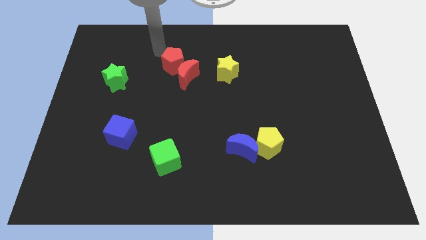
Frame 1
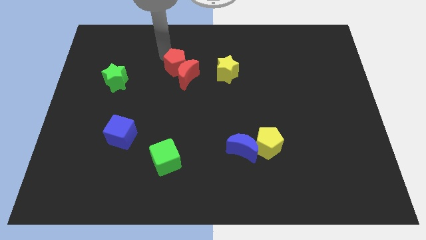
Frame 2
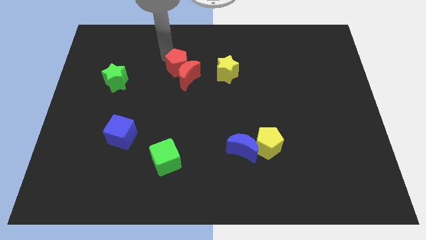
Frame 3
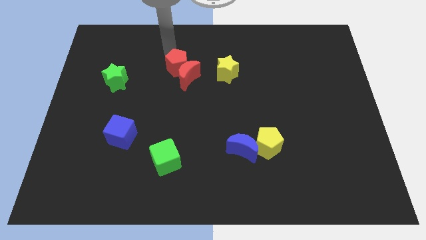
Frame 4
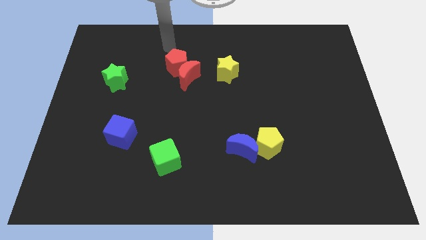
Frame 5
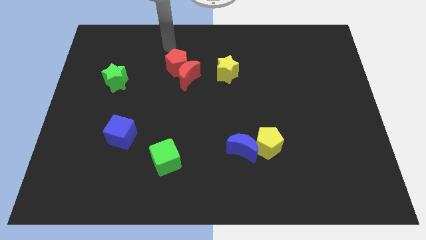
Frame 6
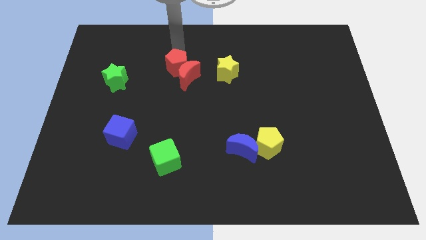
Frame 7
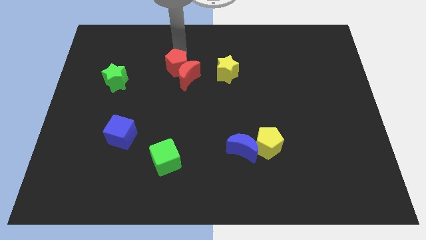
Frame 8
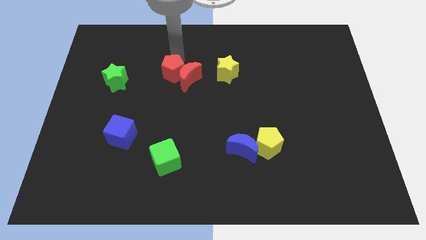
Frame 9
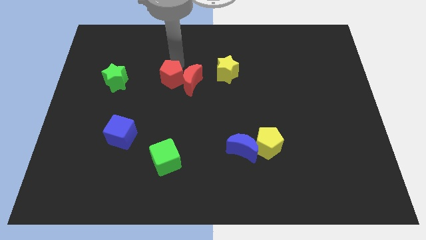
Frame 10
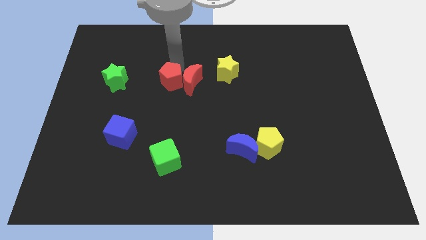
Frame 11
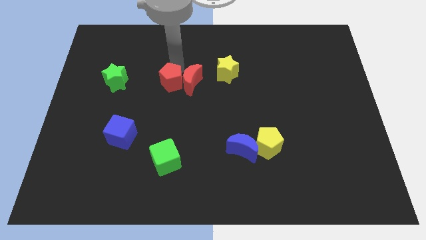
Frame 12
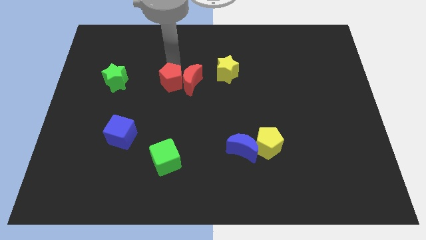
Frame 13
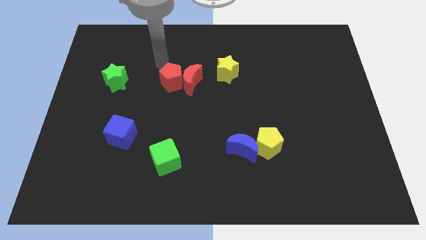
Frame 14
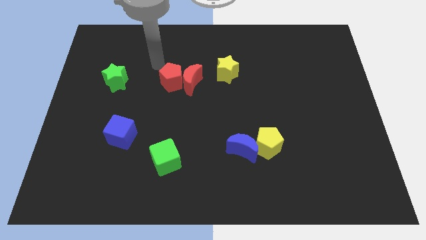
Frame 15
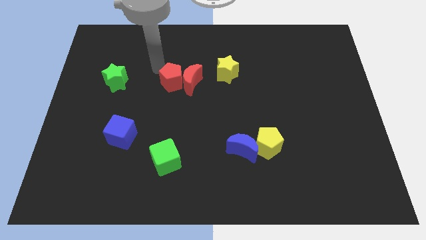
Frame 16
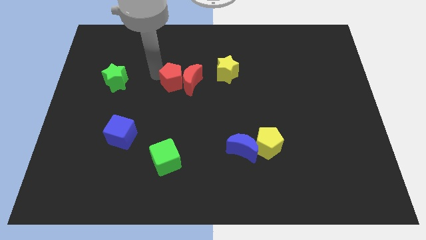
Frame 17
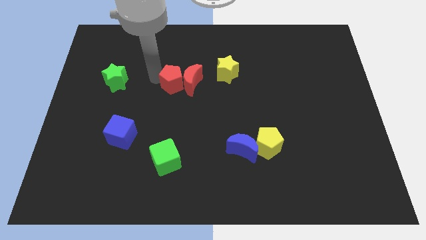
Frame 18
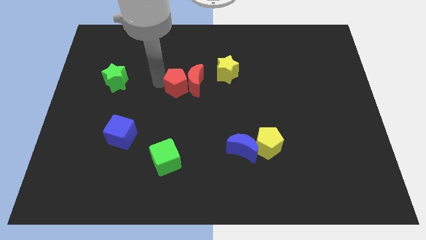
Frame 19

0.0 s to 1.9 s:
move the red pentagon to the left side of the red crescent

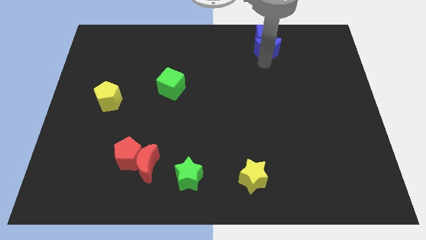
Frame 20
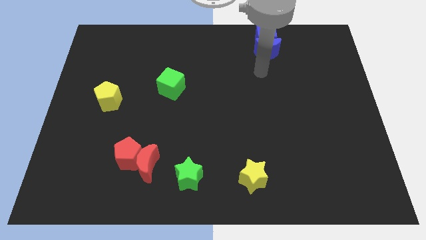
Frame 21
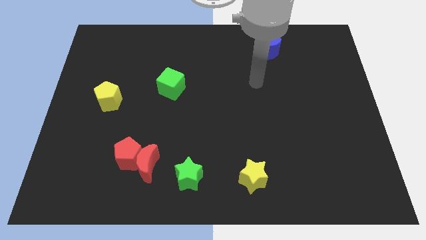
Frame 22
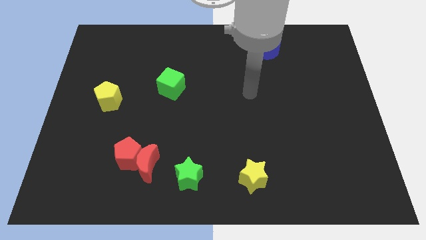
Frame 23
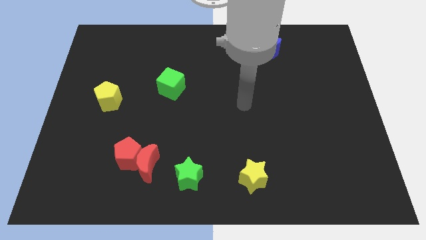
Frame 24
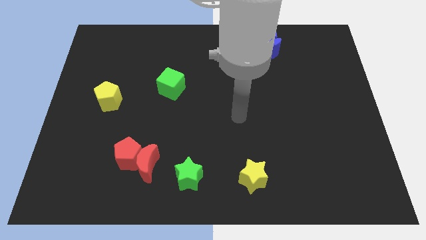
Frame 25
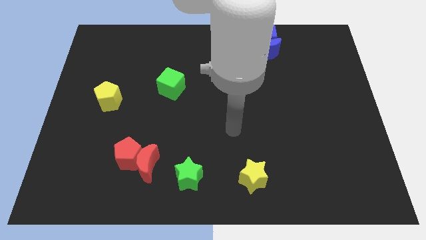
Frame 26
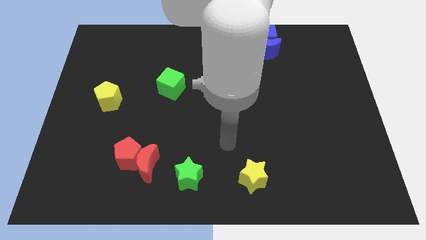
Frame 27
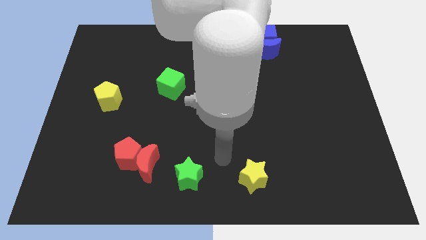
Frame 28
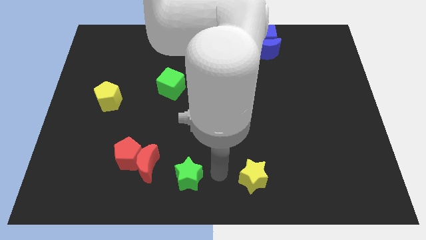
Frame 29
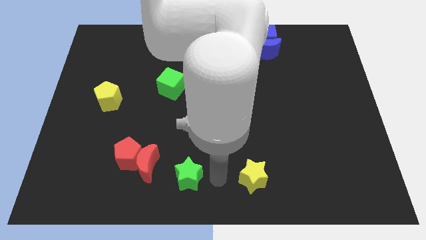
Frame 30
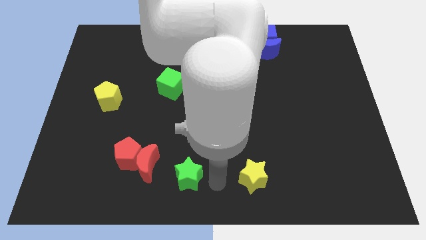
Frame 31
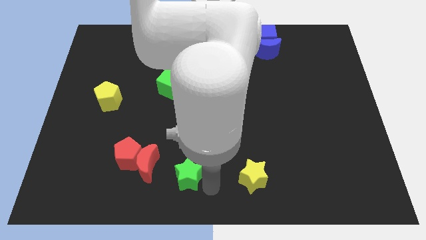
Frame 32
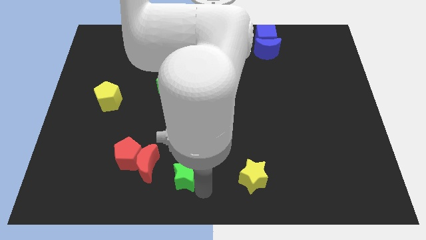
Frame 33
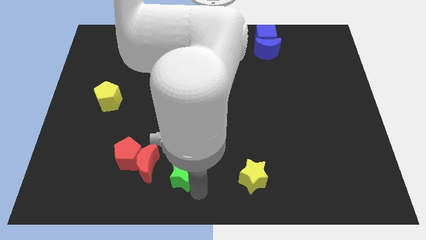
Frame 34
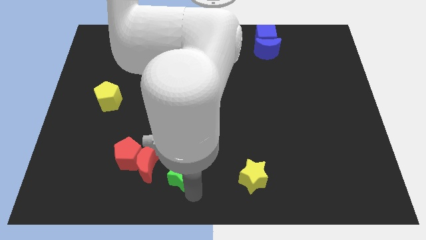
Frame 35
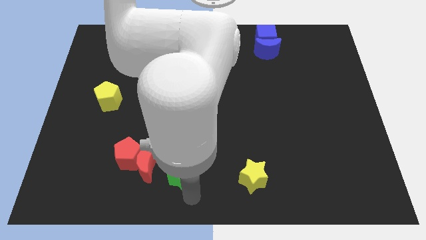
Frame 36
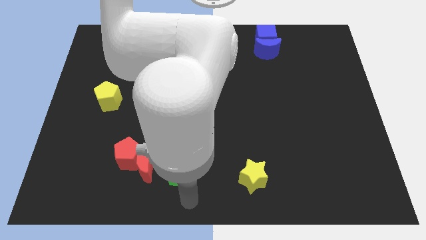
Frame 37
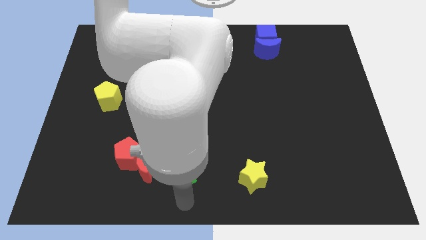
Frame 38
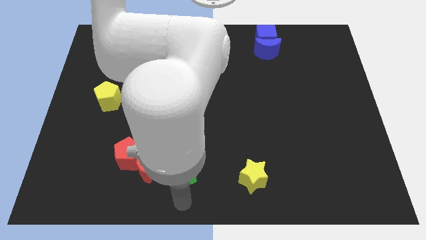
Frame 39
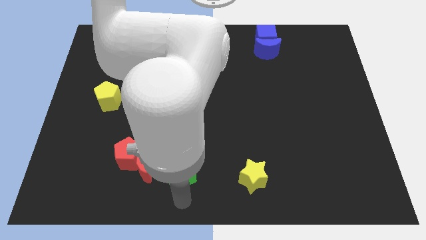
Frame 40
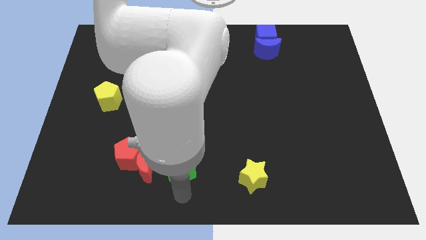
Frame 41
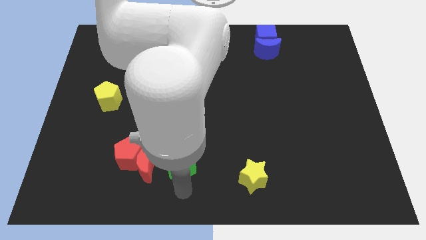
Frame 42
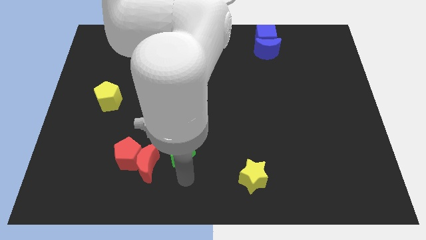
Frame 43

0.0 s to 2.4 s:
place the green star at the top right side of red crescent

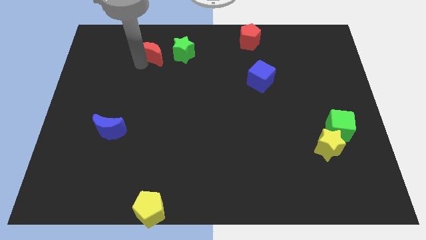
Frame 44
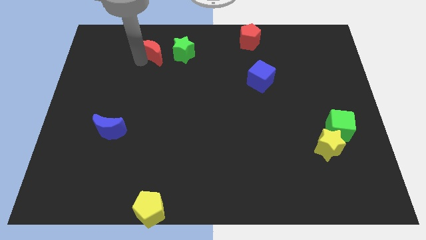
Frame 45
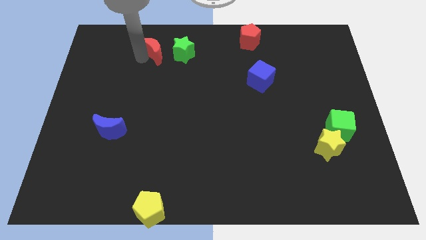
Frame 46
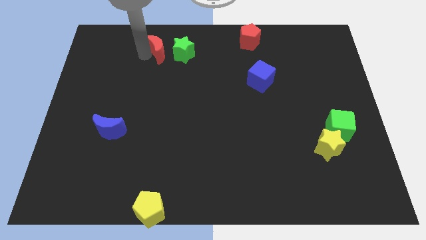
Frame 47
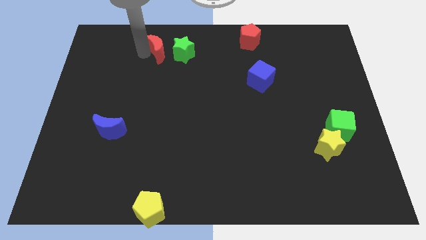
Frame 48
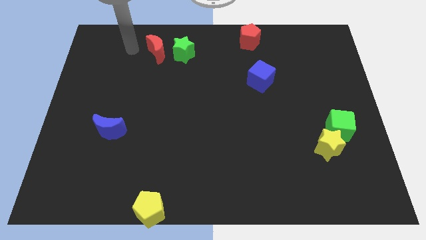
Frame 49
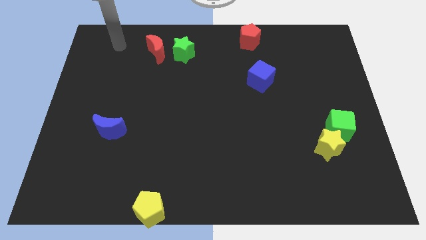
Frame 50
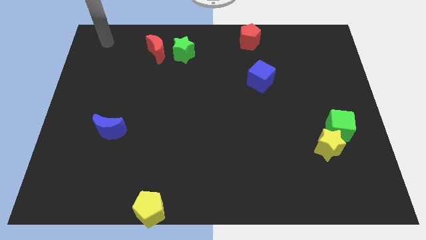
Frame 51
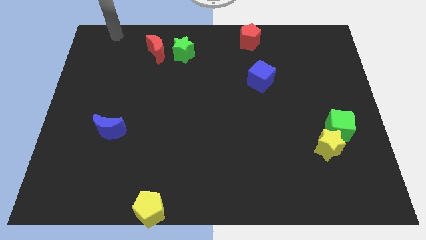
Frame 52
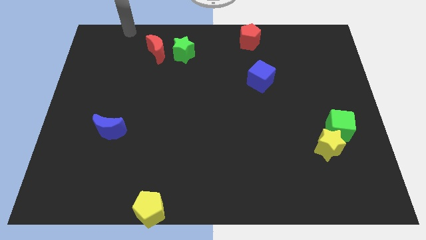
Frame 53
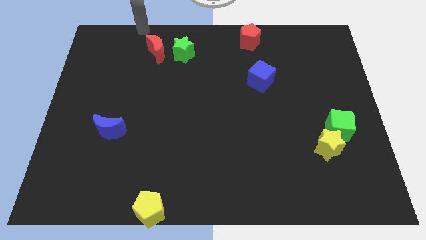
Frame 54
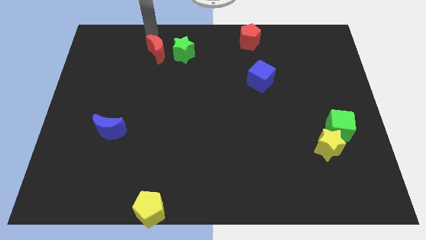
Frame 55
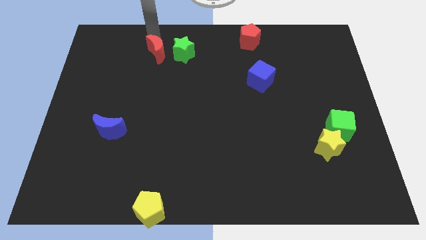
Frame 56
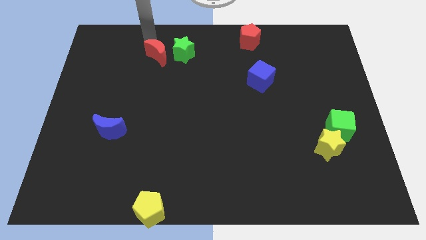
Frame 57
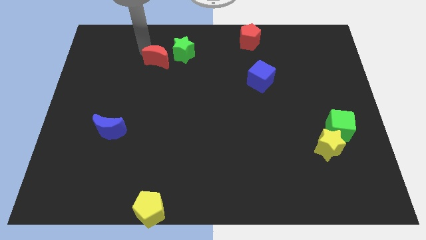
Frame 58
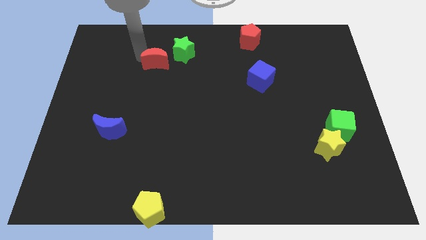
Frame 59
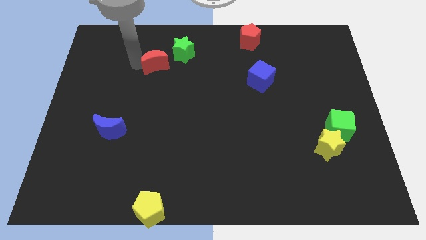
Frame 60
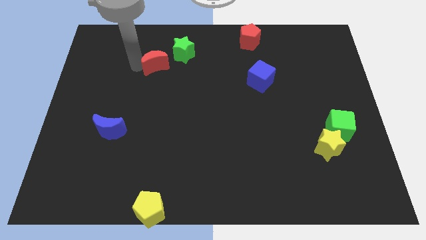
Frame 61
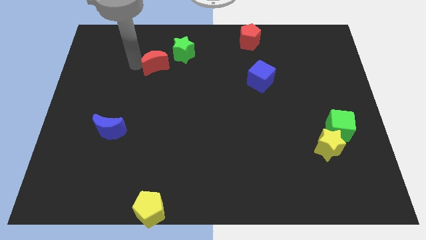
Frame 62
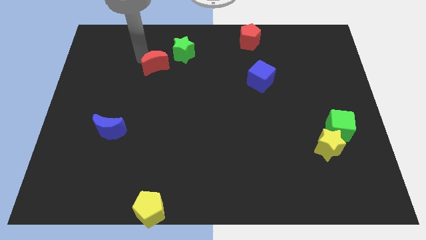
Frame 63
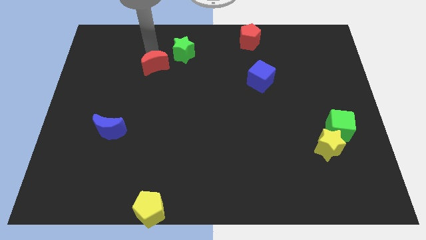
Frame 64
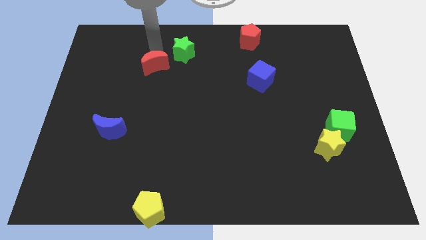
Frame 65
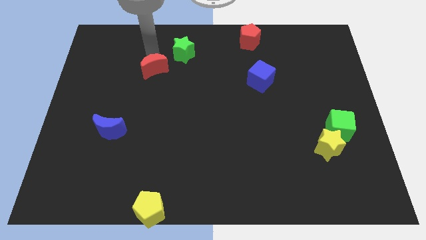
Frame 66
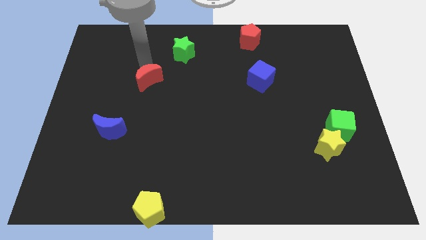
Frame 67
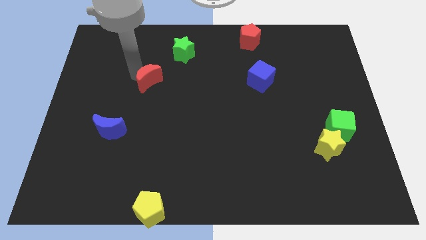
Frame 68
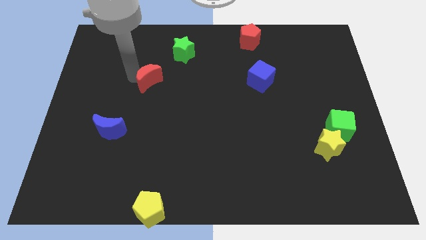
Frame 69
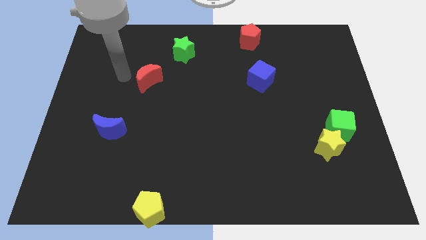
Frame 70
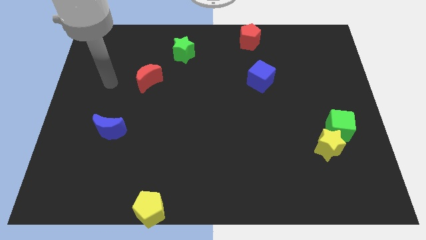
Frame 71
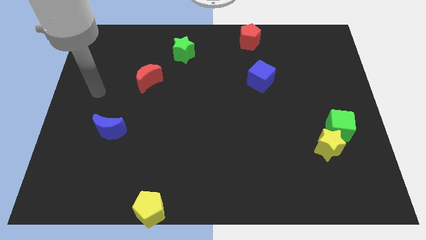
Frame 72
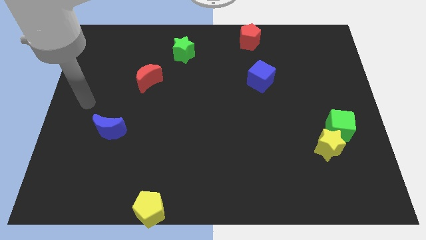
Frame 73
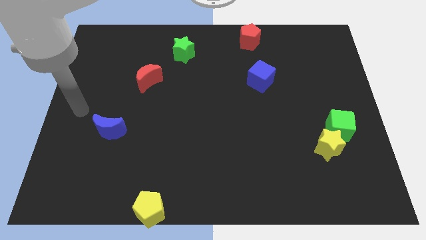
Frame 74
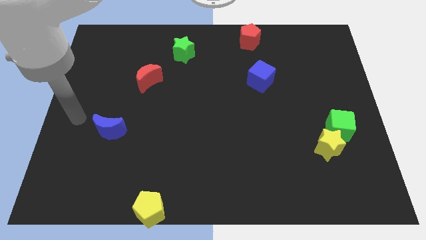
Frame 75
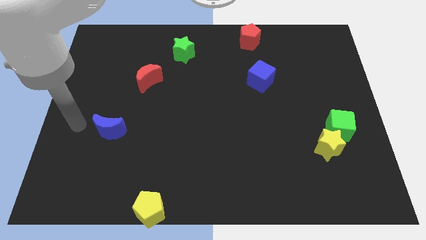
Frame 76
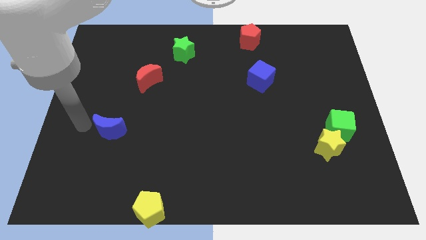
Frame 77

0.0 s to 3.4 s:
place the red moon between green star and blue moon

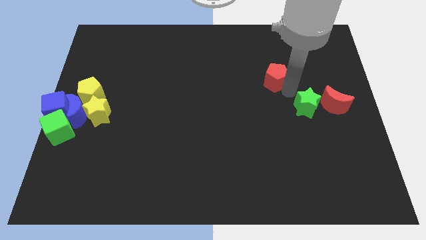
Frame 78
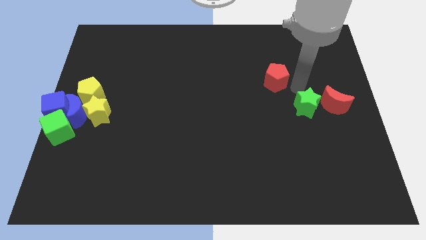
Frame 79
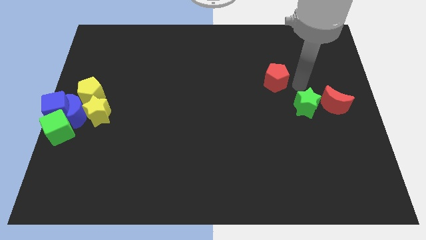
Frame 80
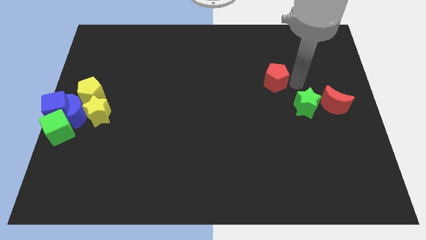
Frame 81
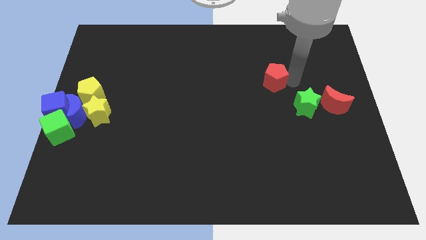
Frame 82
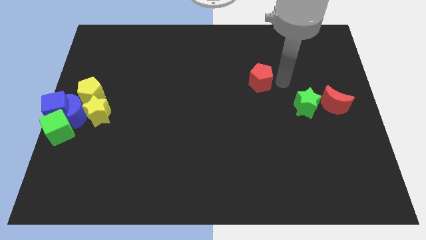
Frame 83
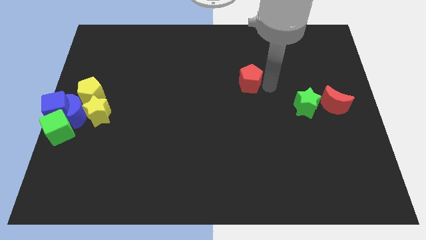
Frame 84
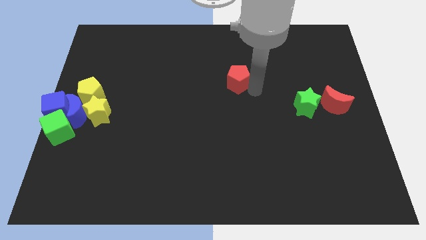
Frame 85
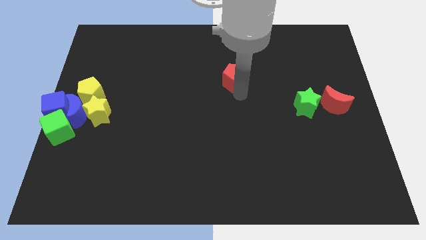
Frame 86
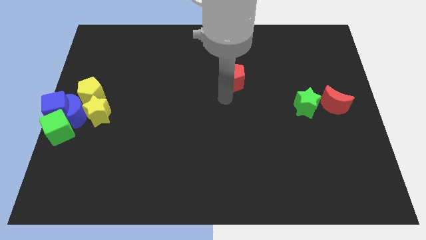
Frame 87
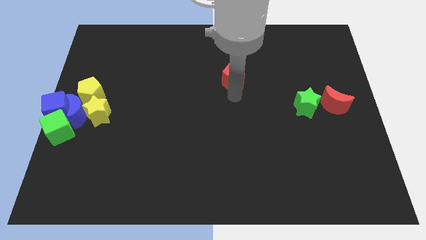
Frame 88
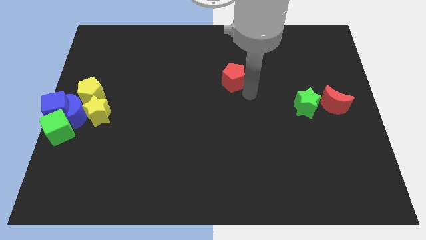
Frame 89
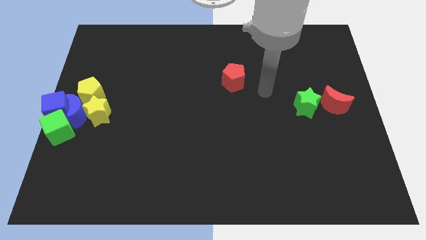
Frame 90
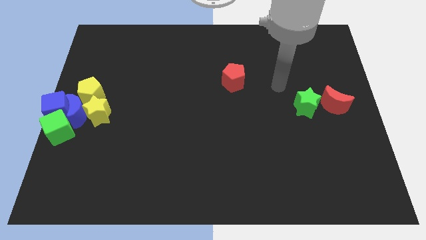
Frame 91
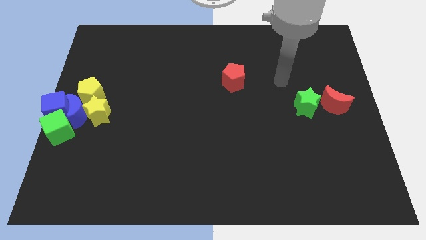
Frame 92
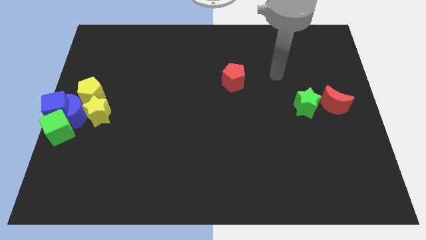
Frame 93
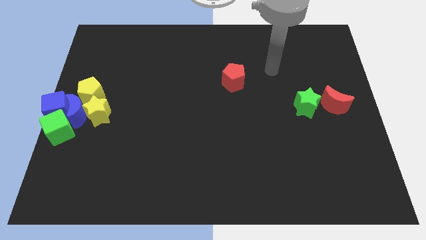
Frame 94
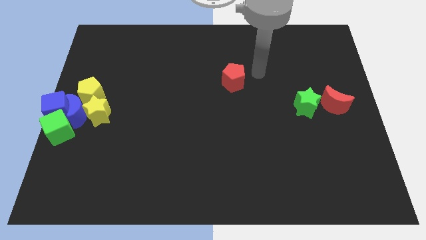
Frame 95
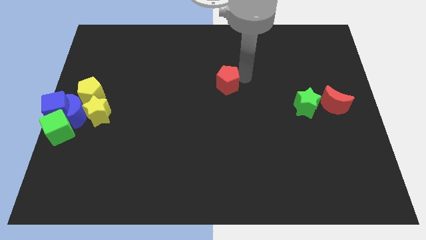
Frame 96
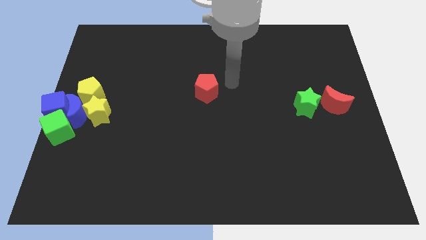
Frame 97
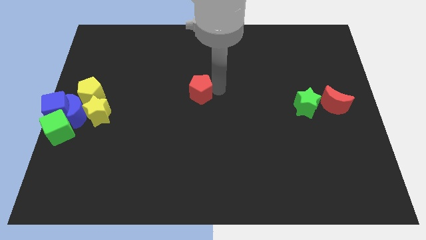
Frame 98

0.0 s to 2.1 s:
place red pentagon at the center
